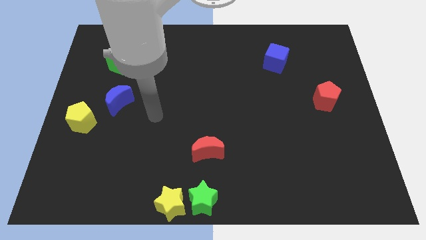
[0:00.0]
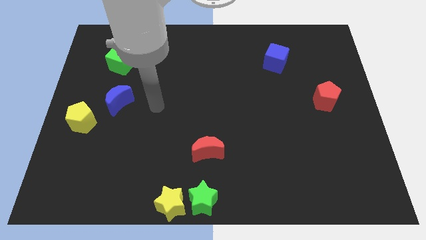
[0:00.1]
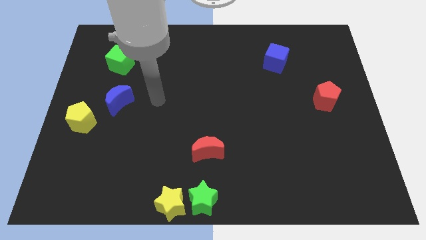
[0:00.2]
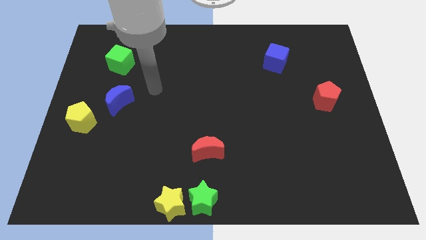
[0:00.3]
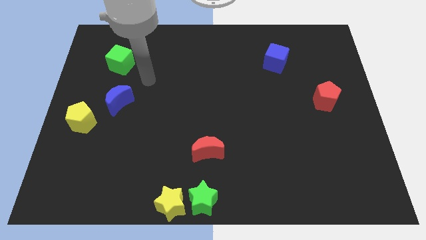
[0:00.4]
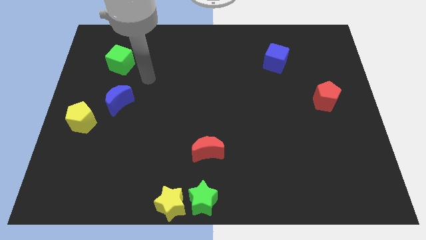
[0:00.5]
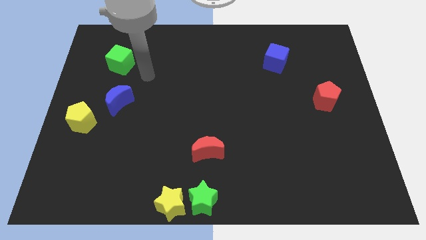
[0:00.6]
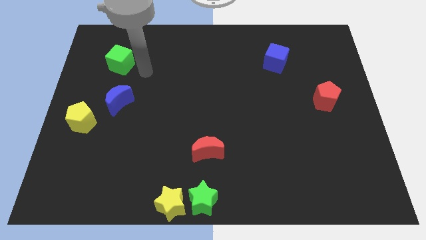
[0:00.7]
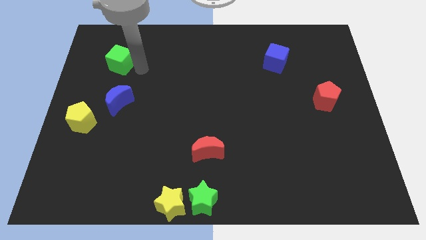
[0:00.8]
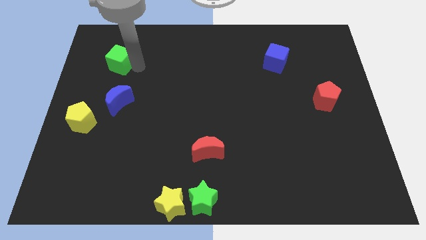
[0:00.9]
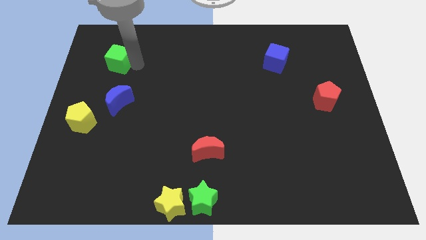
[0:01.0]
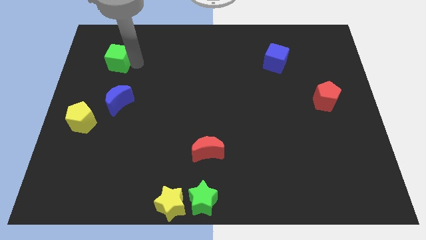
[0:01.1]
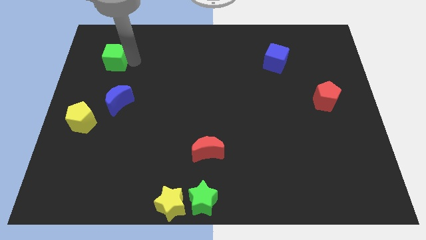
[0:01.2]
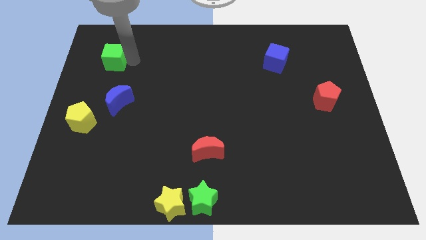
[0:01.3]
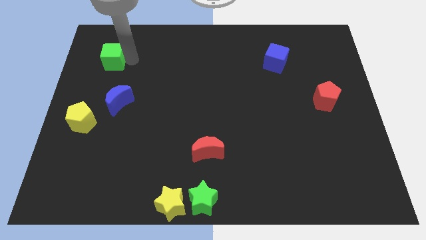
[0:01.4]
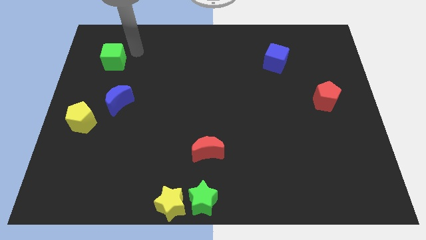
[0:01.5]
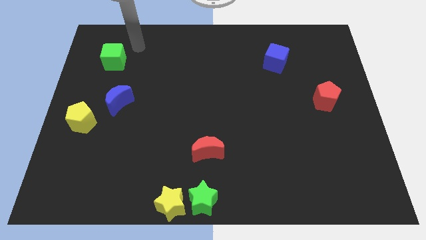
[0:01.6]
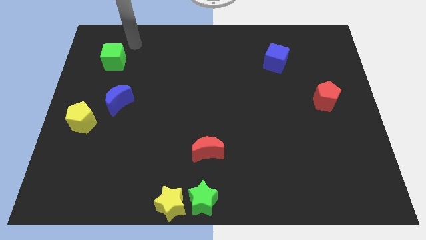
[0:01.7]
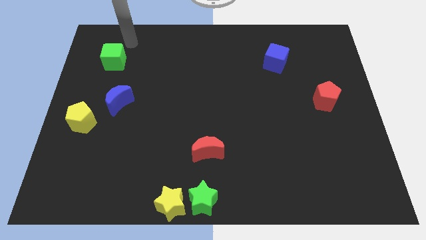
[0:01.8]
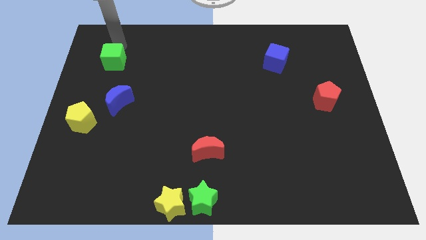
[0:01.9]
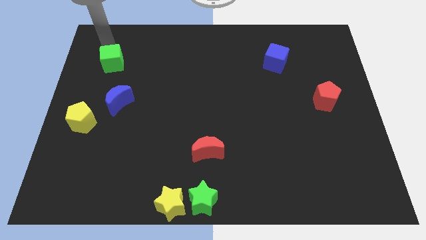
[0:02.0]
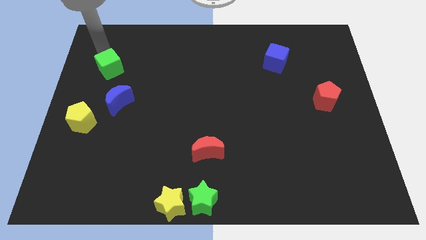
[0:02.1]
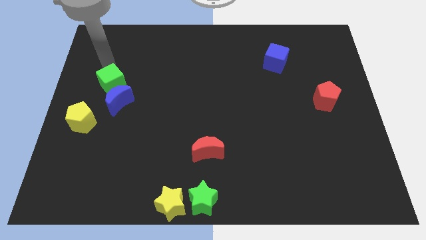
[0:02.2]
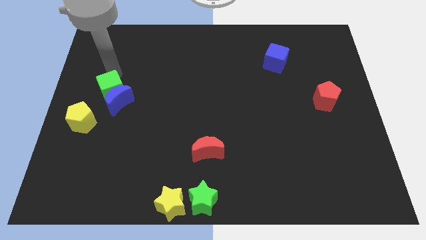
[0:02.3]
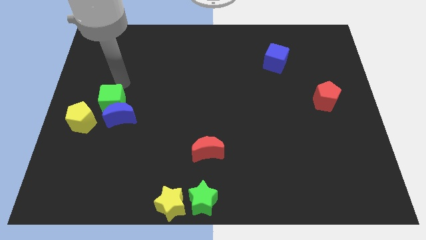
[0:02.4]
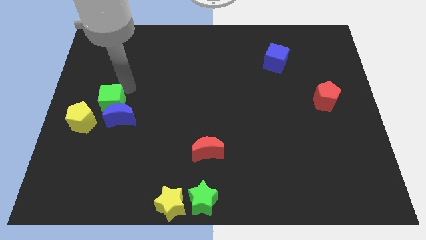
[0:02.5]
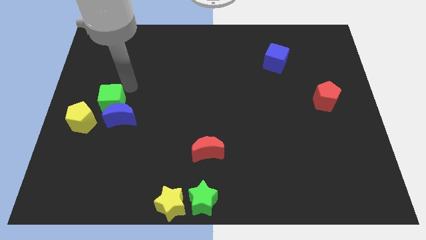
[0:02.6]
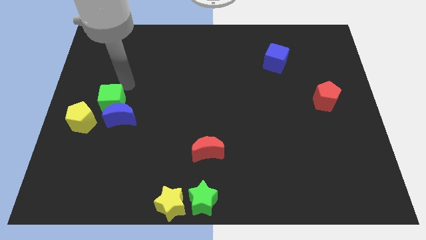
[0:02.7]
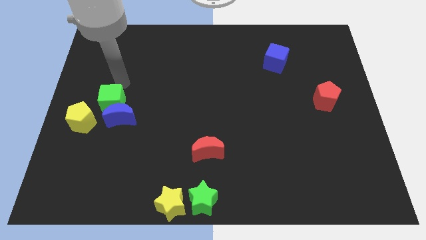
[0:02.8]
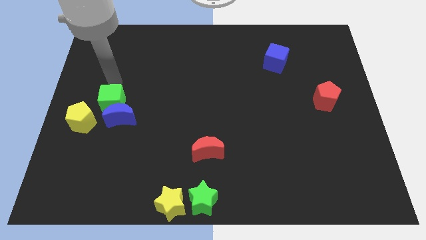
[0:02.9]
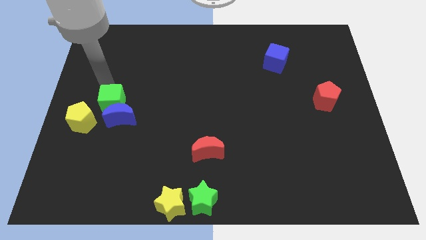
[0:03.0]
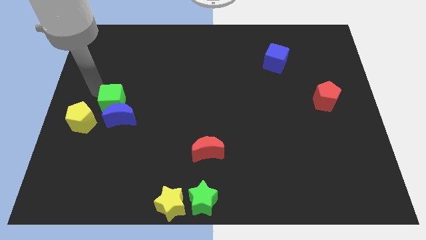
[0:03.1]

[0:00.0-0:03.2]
push the green cube into the blue moon

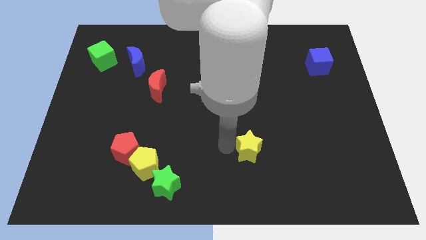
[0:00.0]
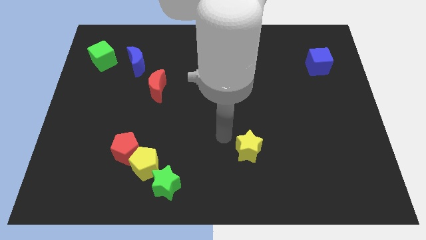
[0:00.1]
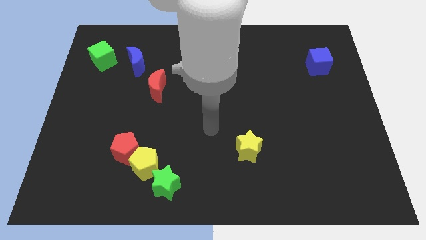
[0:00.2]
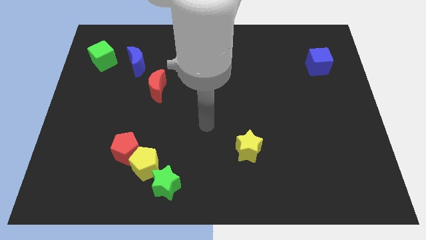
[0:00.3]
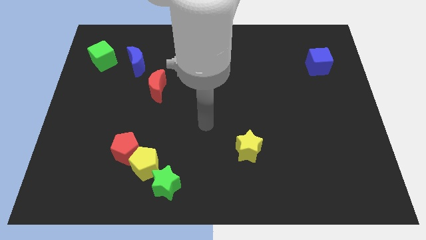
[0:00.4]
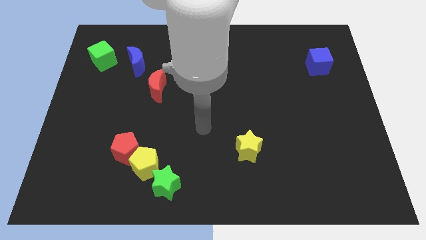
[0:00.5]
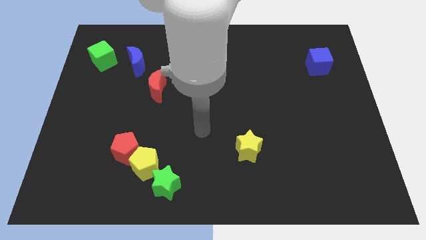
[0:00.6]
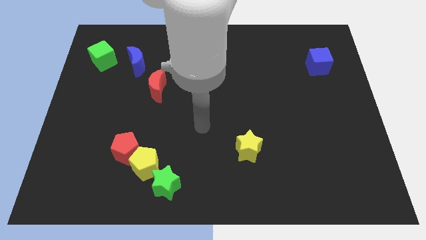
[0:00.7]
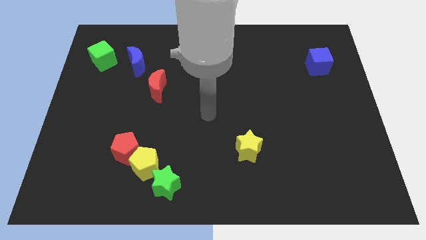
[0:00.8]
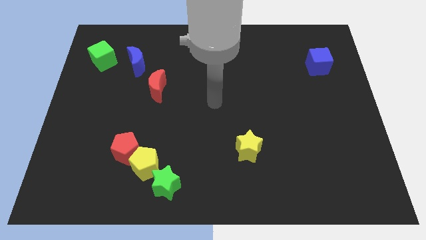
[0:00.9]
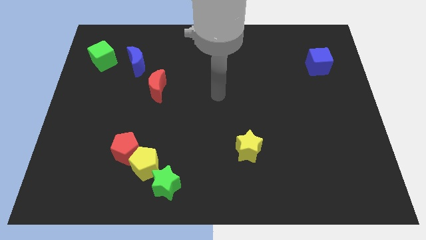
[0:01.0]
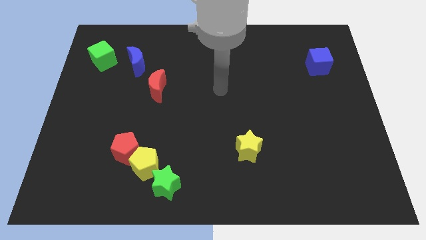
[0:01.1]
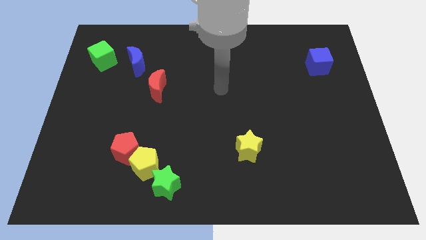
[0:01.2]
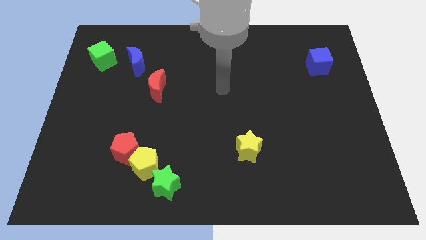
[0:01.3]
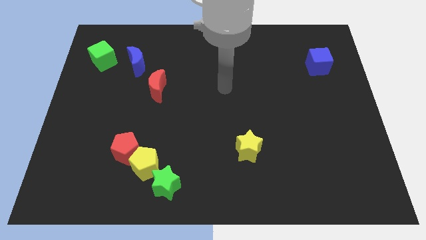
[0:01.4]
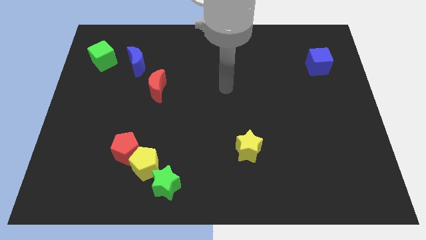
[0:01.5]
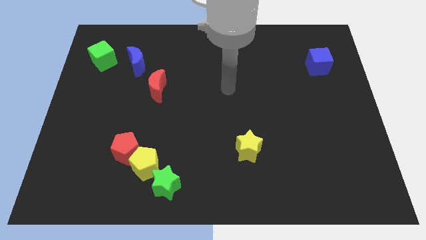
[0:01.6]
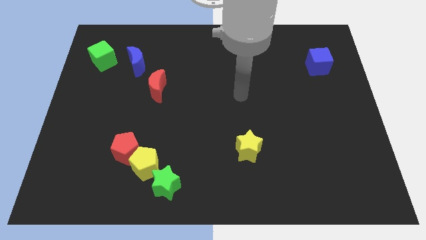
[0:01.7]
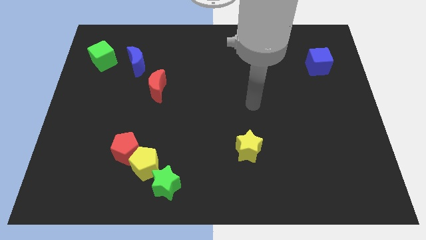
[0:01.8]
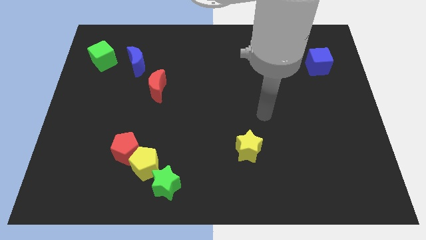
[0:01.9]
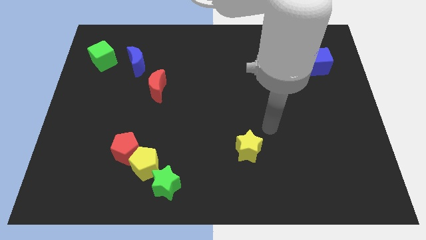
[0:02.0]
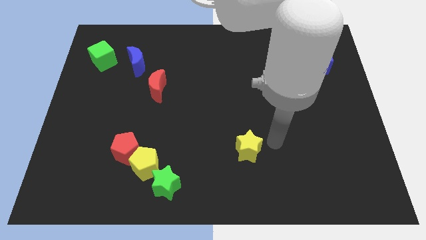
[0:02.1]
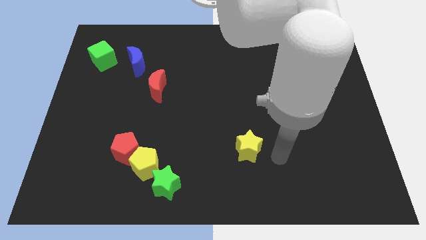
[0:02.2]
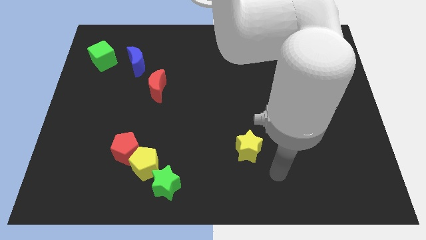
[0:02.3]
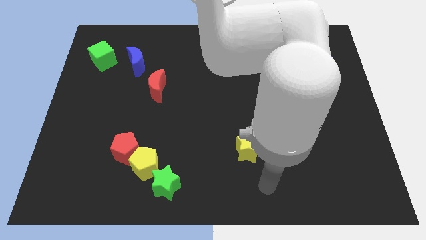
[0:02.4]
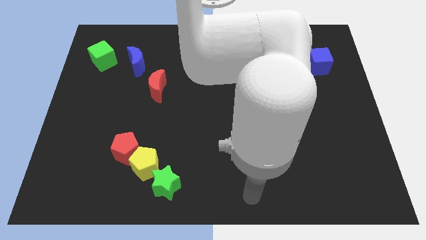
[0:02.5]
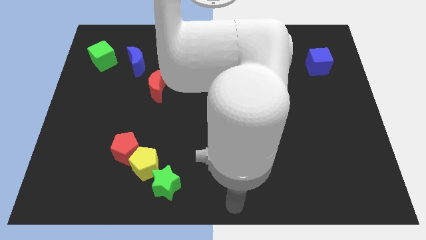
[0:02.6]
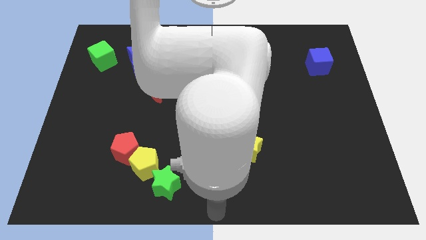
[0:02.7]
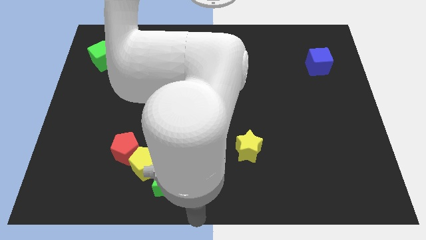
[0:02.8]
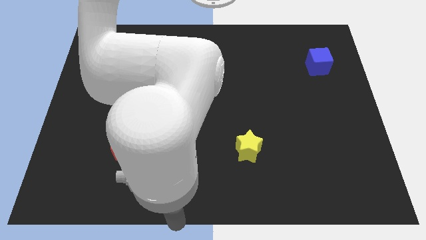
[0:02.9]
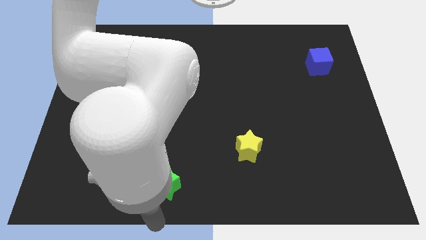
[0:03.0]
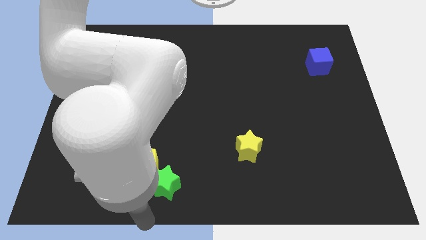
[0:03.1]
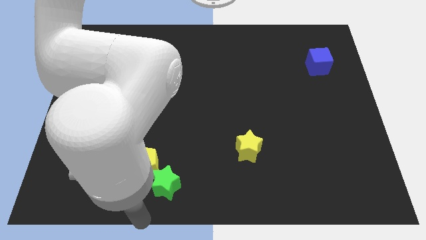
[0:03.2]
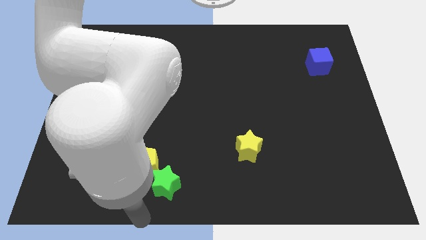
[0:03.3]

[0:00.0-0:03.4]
move your arm to the bottom of the yellow pentagon

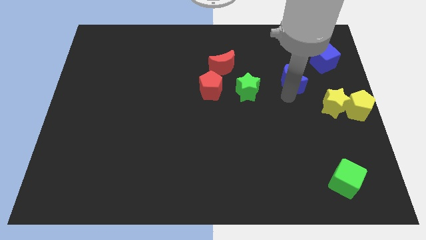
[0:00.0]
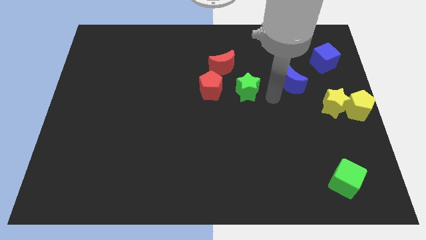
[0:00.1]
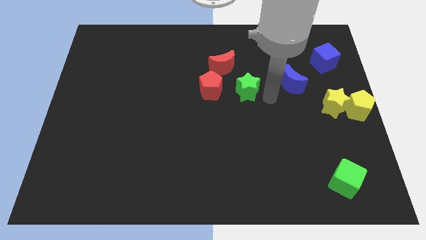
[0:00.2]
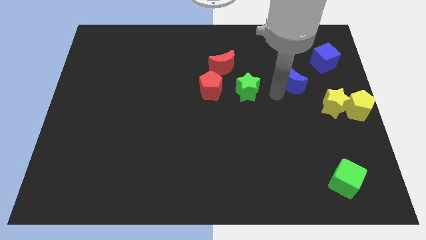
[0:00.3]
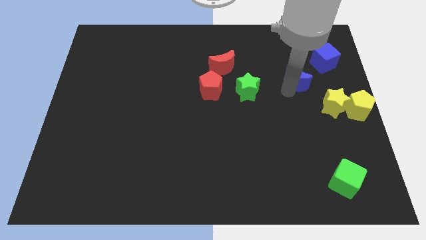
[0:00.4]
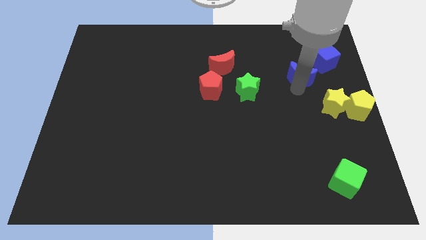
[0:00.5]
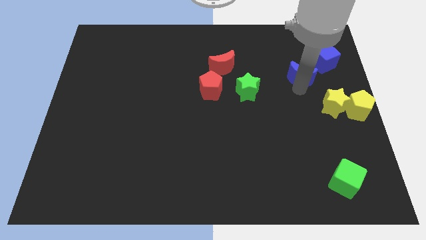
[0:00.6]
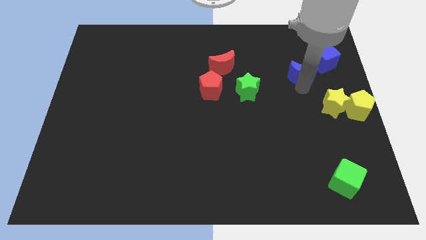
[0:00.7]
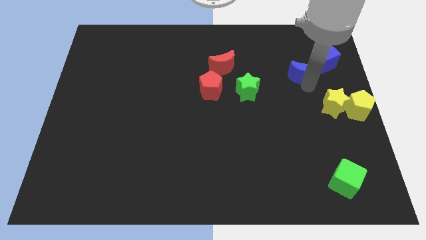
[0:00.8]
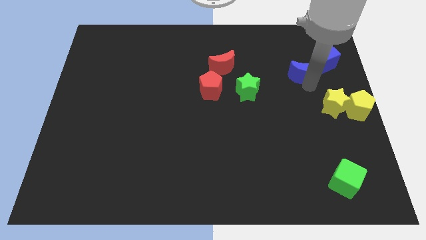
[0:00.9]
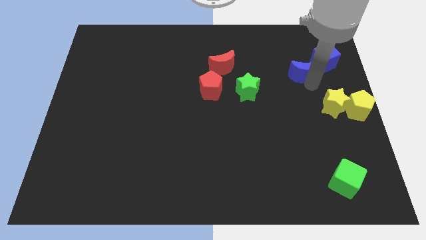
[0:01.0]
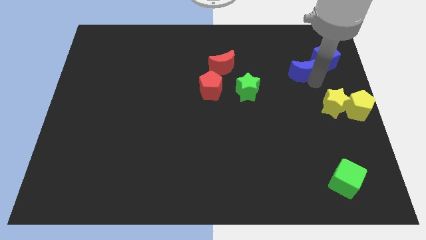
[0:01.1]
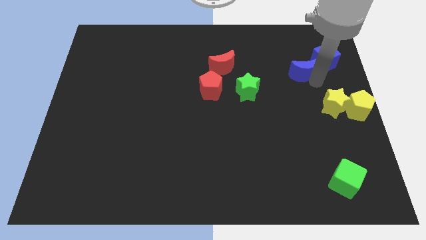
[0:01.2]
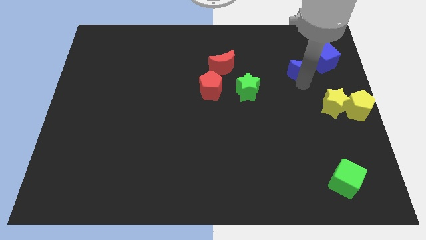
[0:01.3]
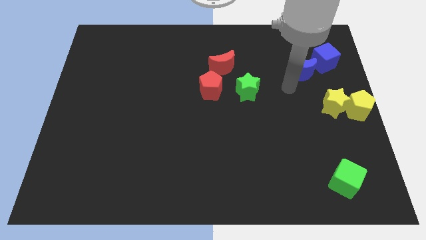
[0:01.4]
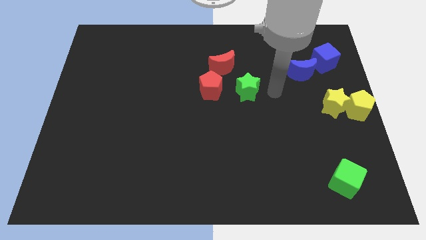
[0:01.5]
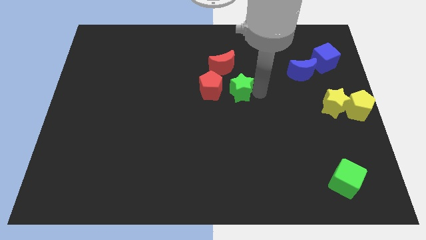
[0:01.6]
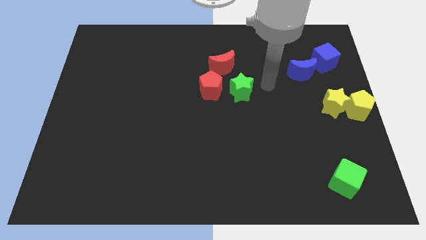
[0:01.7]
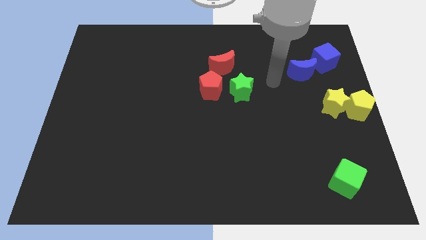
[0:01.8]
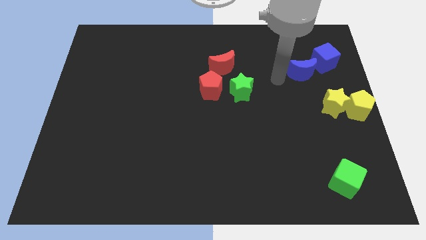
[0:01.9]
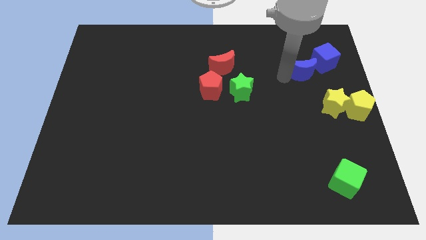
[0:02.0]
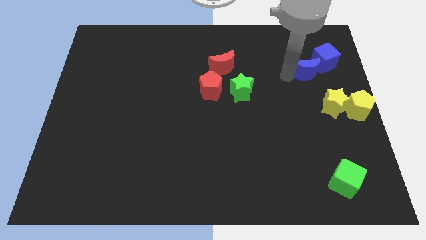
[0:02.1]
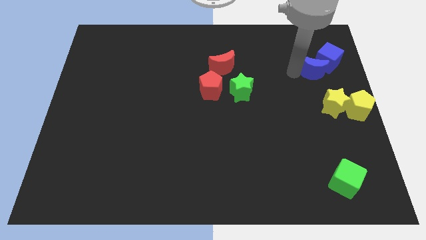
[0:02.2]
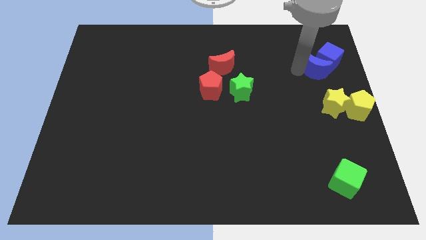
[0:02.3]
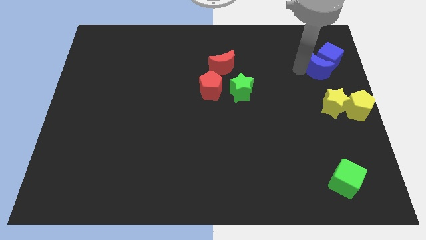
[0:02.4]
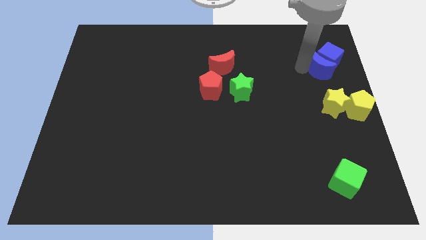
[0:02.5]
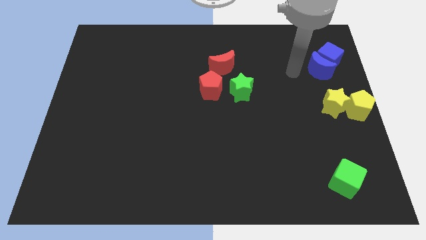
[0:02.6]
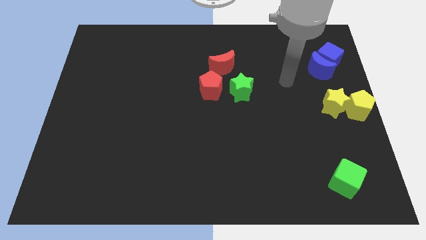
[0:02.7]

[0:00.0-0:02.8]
push the blue crescent into the blue cube
